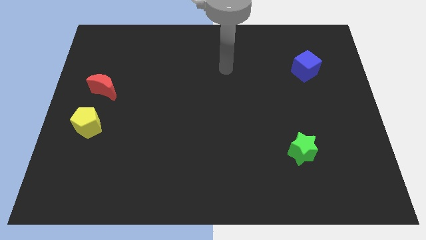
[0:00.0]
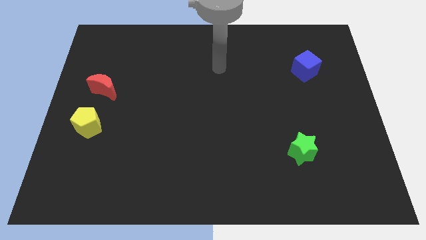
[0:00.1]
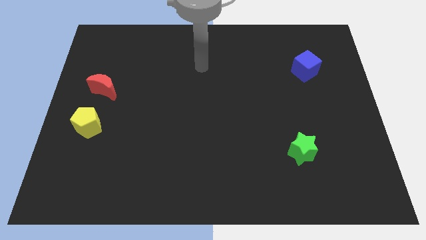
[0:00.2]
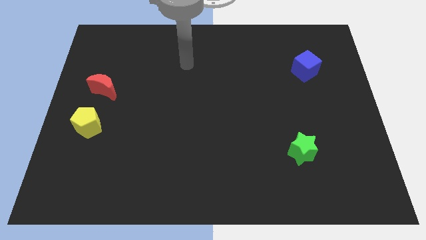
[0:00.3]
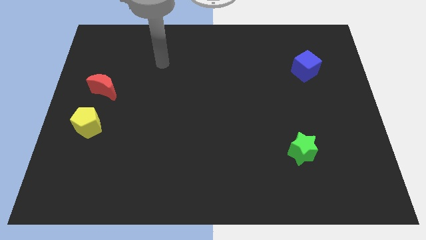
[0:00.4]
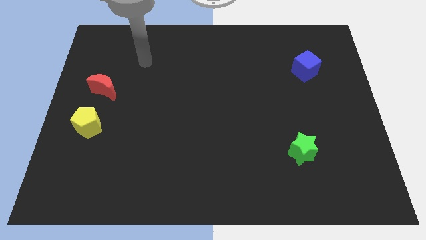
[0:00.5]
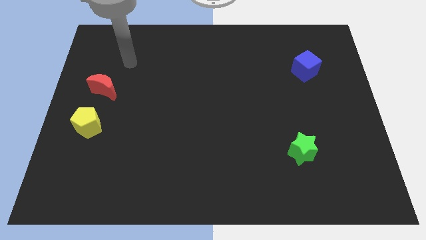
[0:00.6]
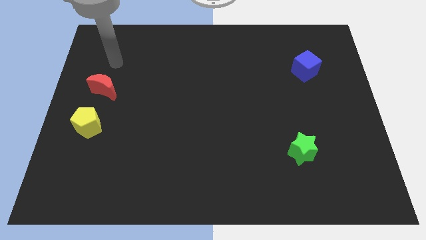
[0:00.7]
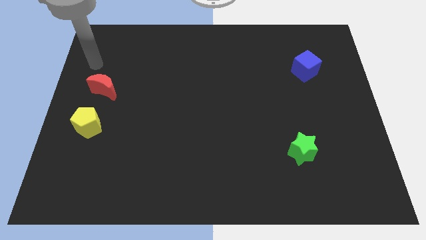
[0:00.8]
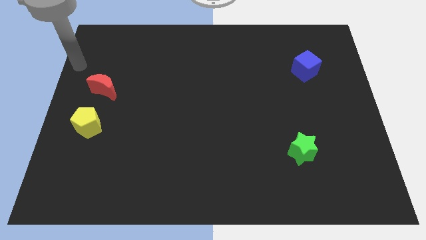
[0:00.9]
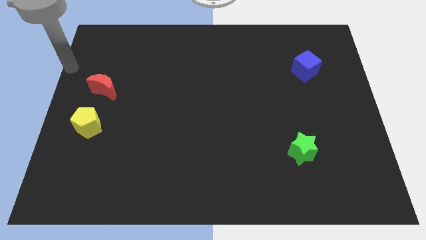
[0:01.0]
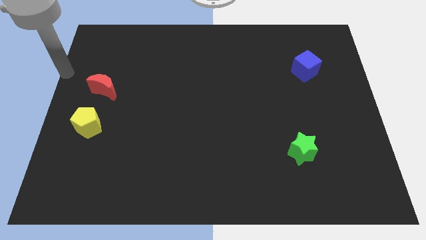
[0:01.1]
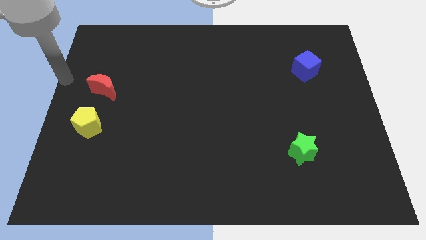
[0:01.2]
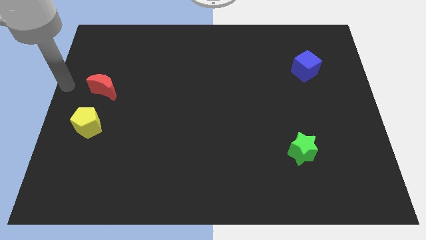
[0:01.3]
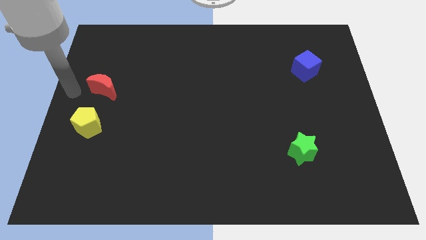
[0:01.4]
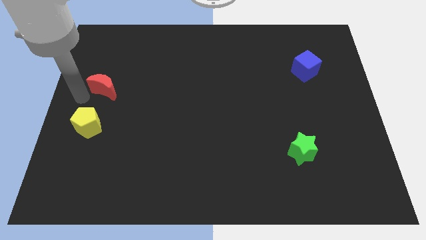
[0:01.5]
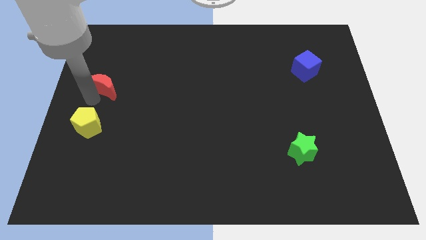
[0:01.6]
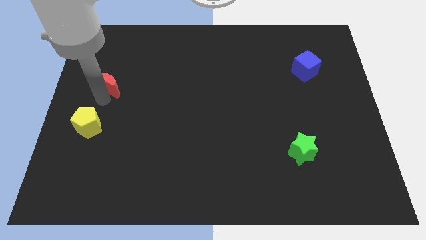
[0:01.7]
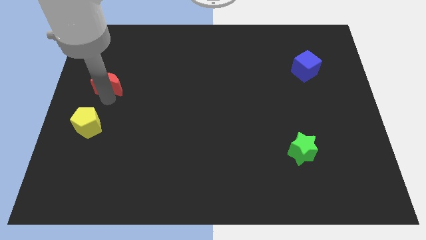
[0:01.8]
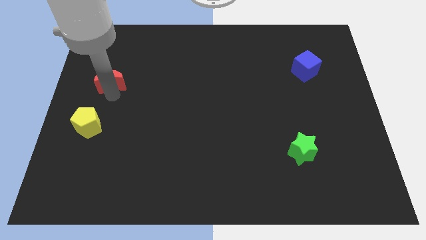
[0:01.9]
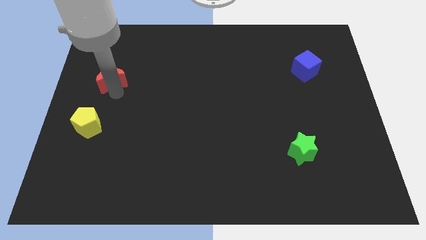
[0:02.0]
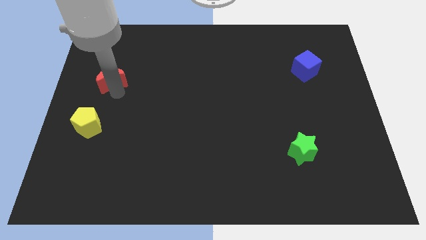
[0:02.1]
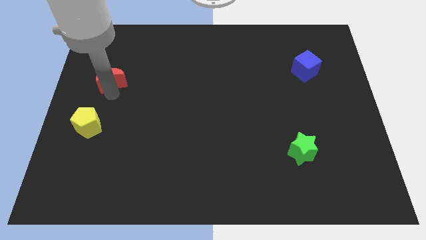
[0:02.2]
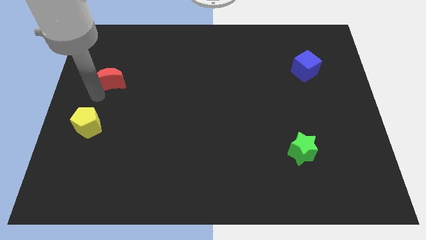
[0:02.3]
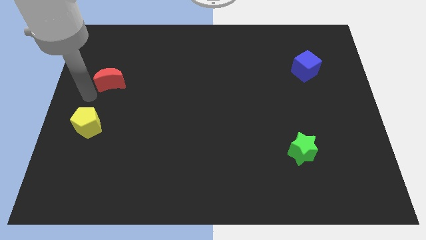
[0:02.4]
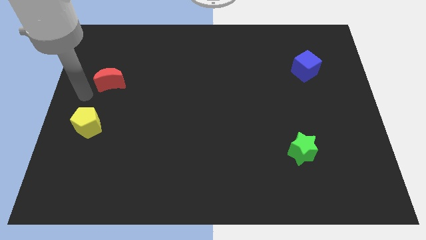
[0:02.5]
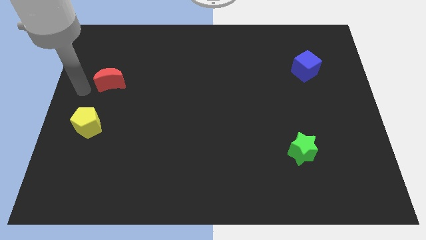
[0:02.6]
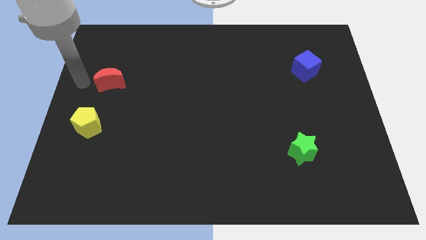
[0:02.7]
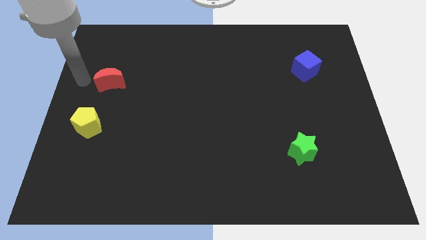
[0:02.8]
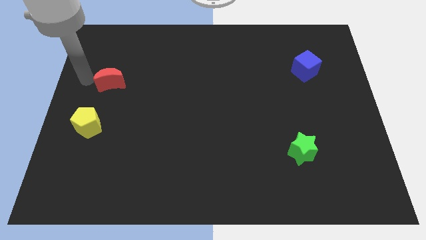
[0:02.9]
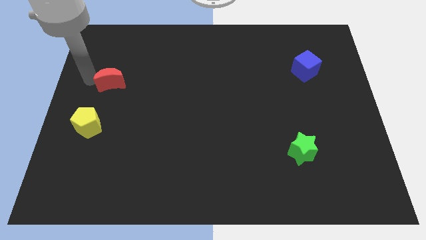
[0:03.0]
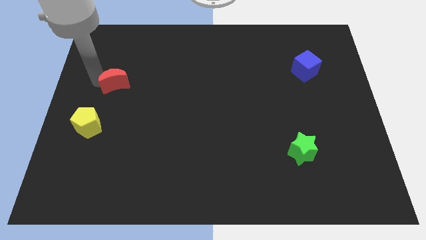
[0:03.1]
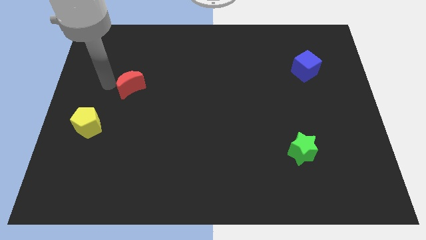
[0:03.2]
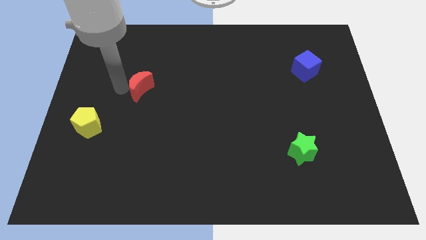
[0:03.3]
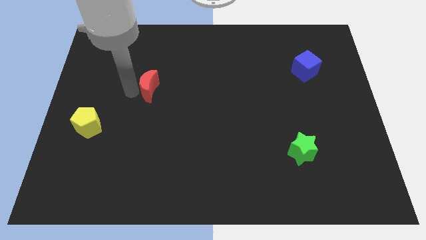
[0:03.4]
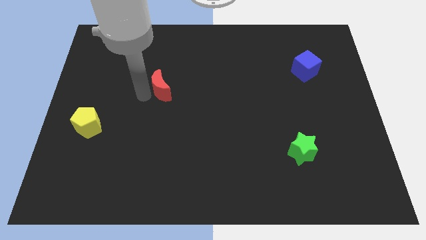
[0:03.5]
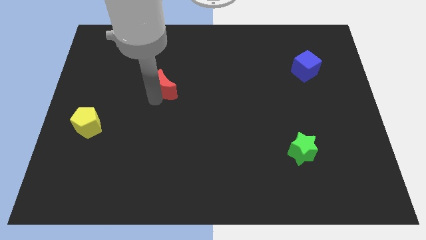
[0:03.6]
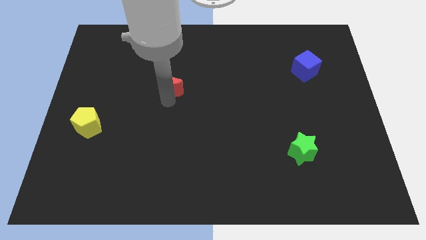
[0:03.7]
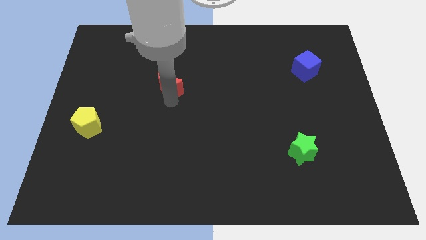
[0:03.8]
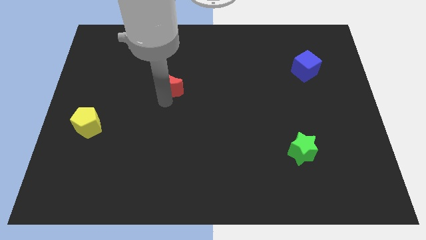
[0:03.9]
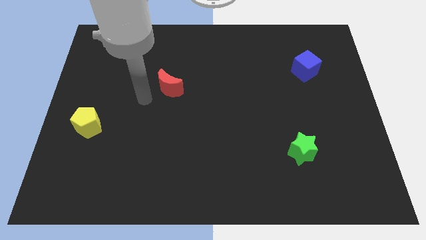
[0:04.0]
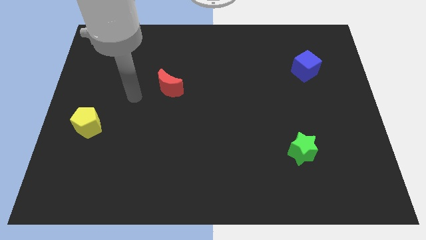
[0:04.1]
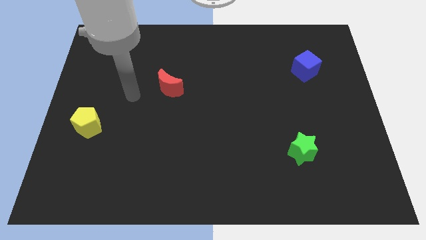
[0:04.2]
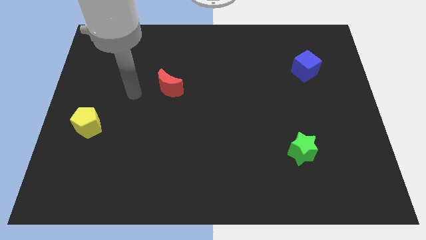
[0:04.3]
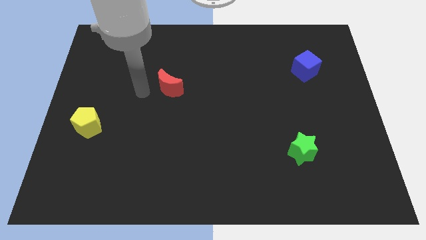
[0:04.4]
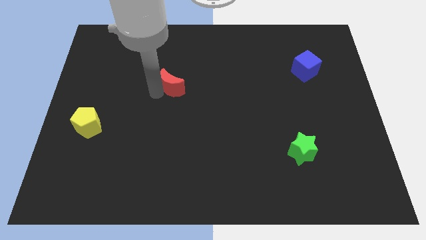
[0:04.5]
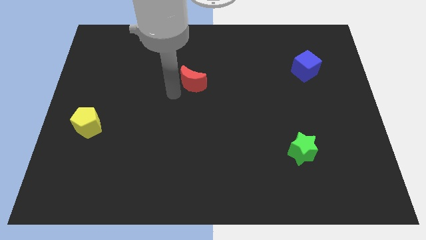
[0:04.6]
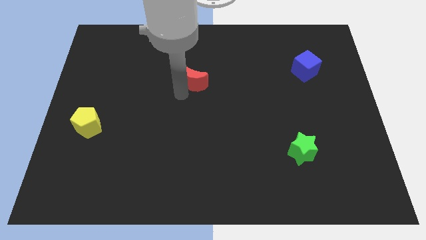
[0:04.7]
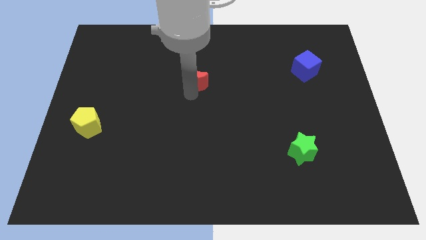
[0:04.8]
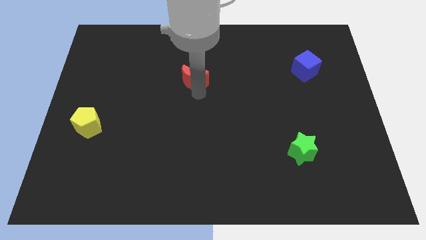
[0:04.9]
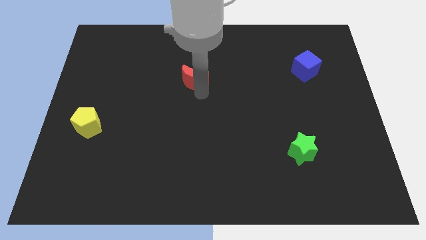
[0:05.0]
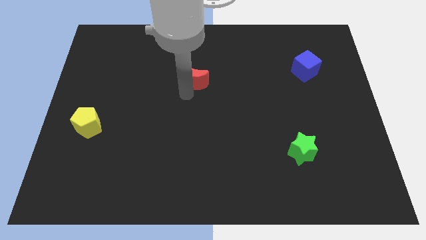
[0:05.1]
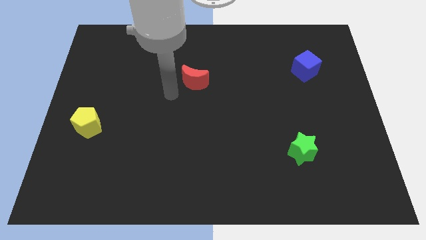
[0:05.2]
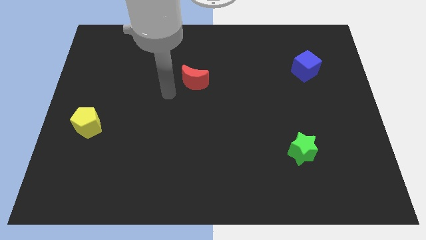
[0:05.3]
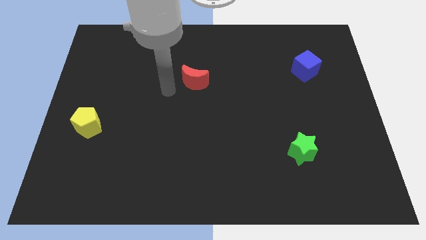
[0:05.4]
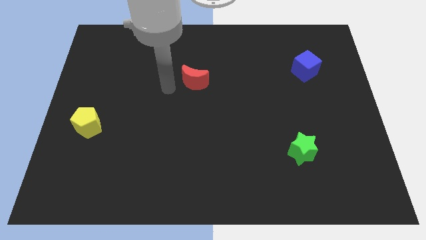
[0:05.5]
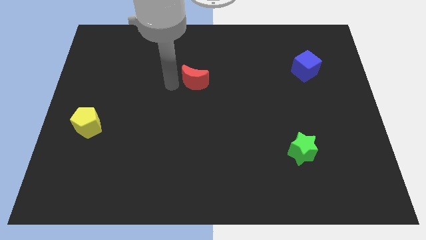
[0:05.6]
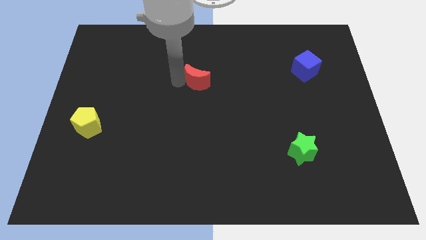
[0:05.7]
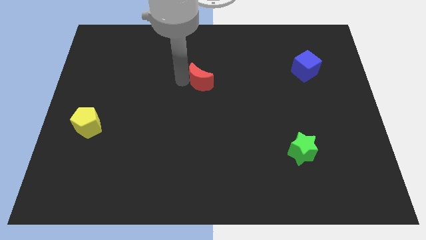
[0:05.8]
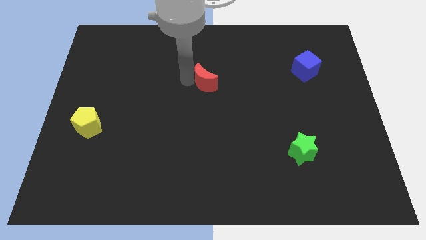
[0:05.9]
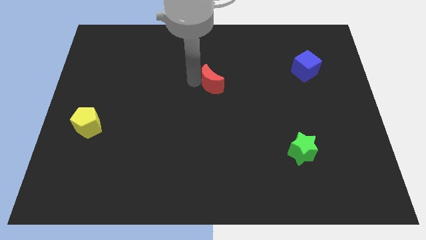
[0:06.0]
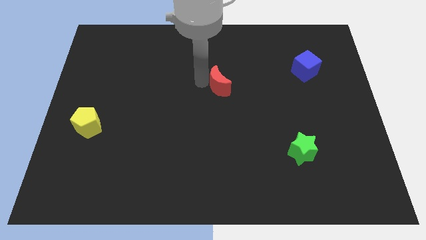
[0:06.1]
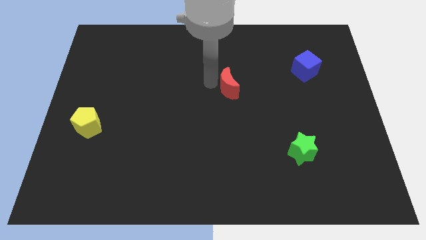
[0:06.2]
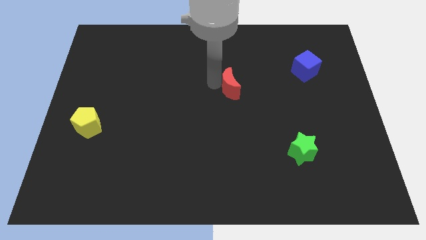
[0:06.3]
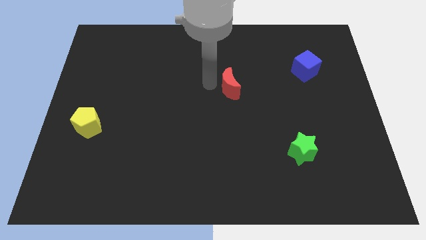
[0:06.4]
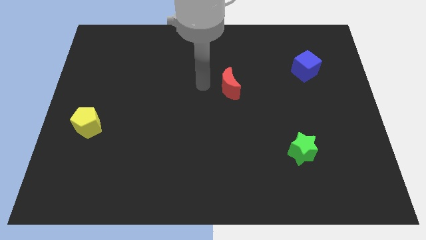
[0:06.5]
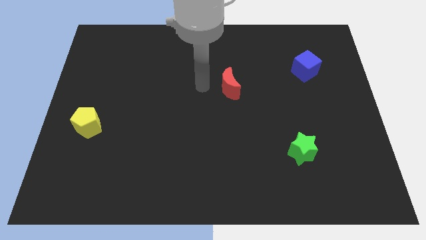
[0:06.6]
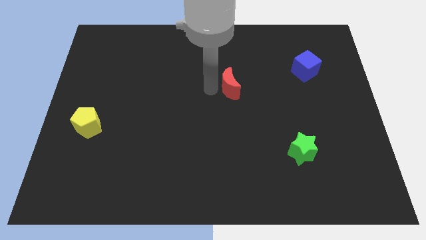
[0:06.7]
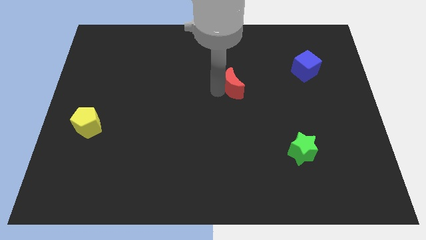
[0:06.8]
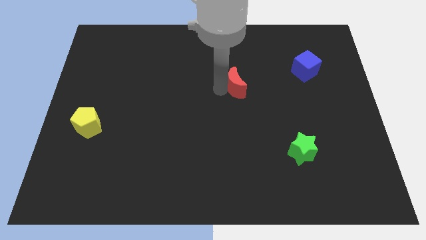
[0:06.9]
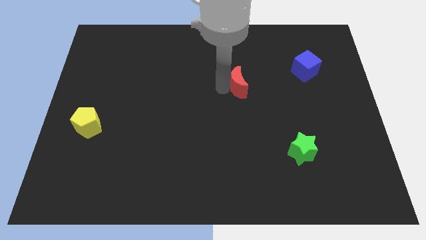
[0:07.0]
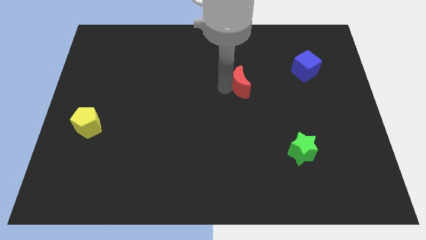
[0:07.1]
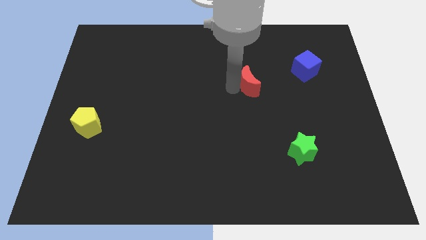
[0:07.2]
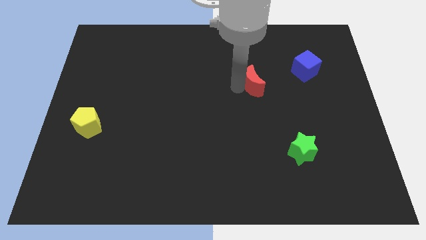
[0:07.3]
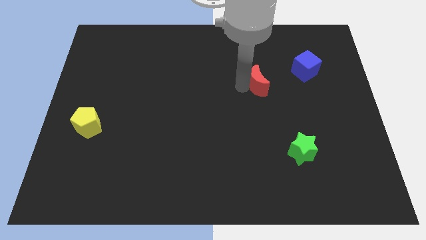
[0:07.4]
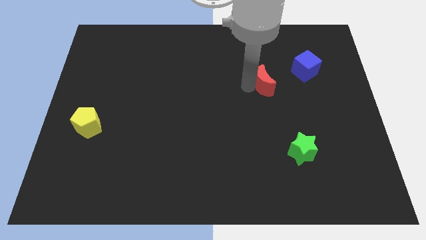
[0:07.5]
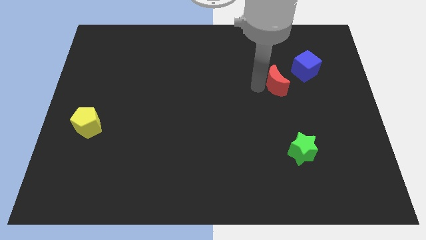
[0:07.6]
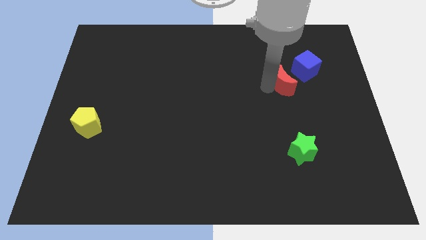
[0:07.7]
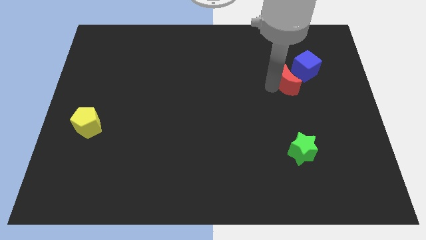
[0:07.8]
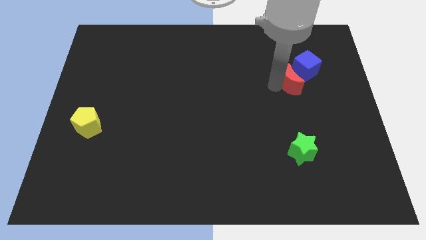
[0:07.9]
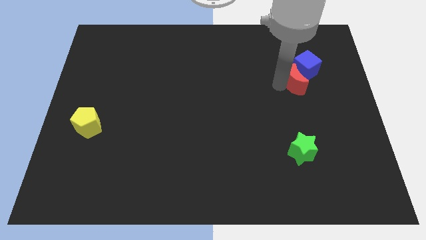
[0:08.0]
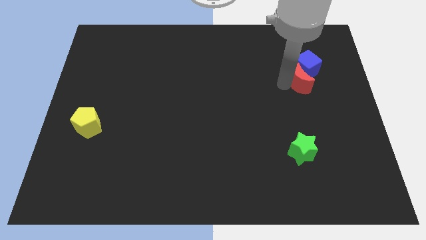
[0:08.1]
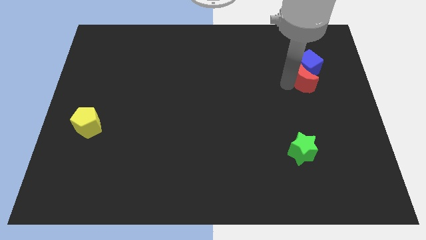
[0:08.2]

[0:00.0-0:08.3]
slide the moon towards the blue block

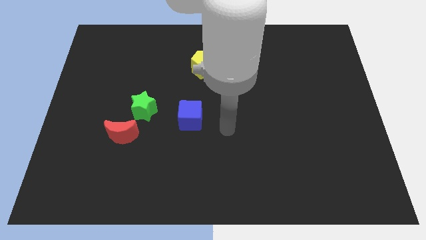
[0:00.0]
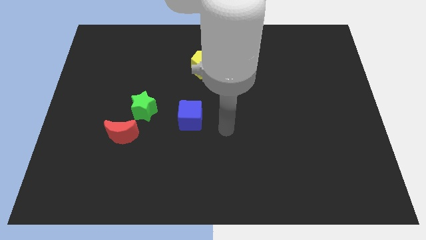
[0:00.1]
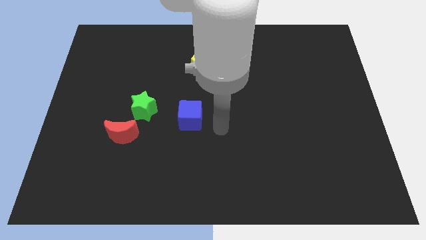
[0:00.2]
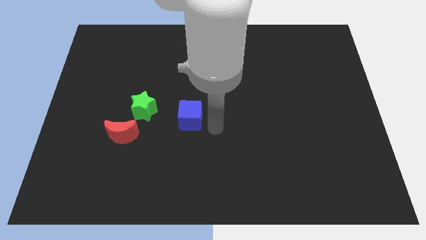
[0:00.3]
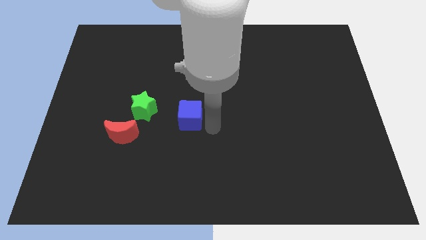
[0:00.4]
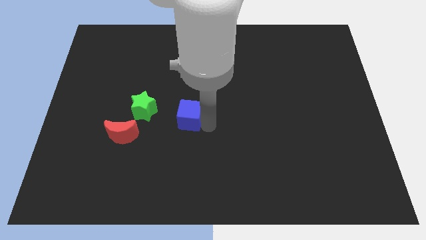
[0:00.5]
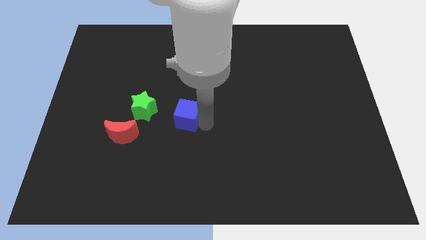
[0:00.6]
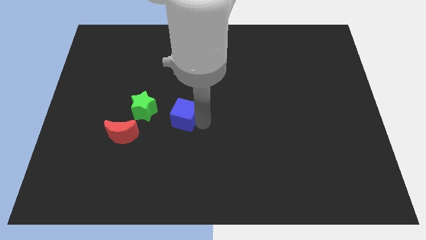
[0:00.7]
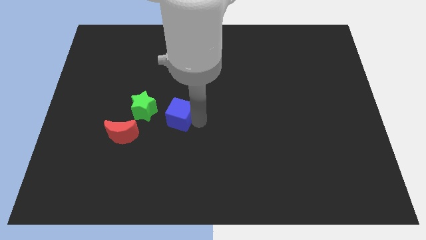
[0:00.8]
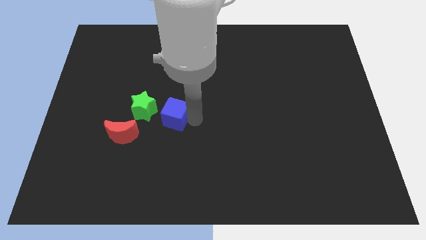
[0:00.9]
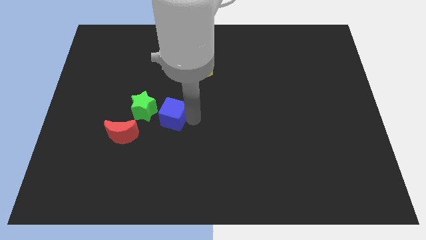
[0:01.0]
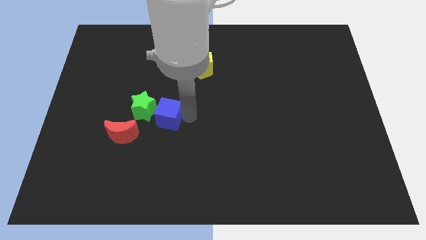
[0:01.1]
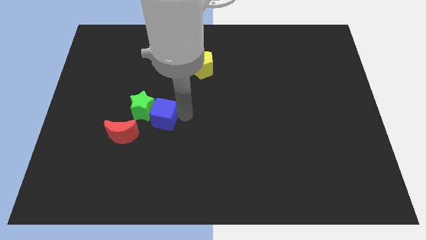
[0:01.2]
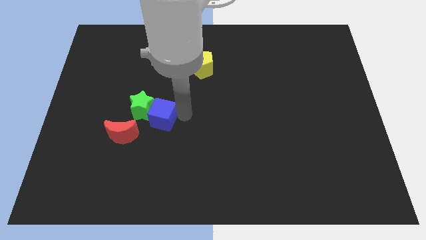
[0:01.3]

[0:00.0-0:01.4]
put the blue block to the green star
